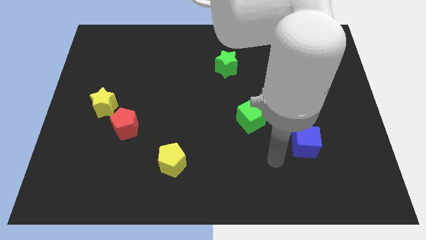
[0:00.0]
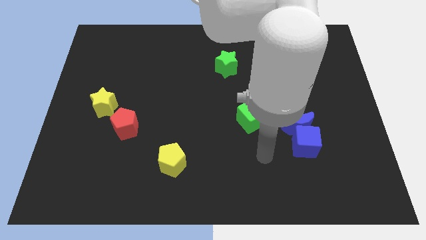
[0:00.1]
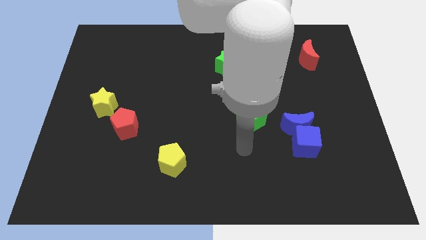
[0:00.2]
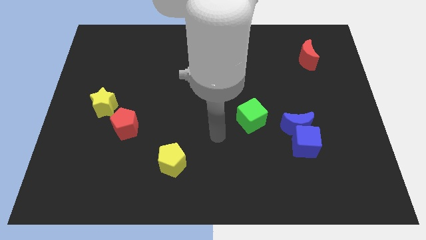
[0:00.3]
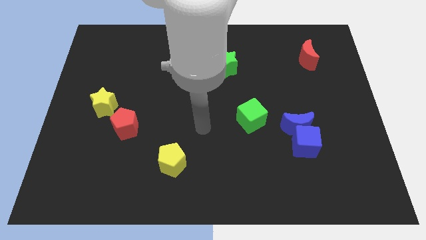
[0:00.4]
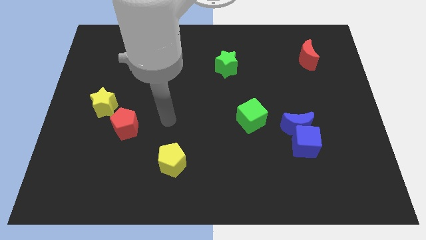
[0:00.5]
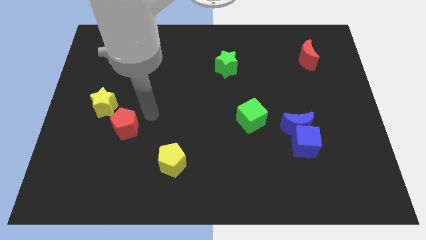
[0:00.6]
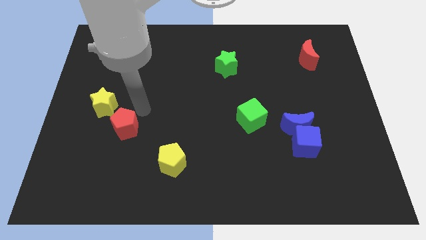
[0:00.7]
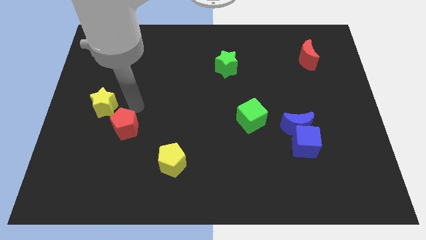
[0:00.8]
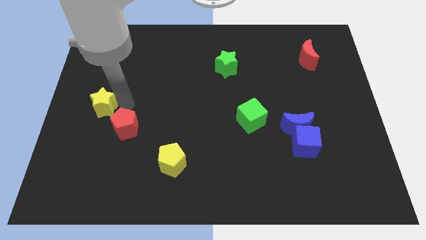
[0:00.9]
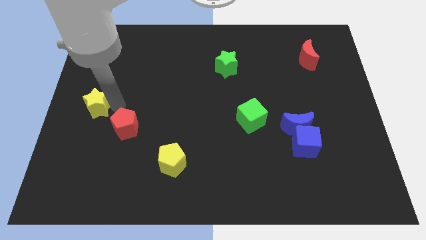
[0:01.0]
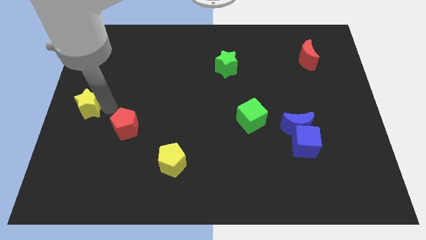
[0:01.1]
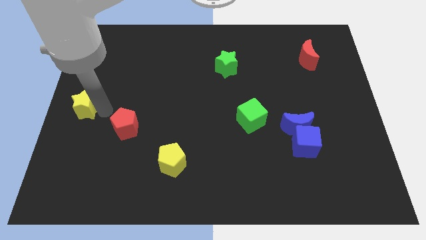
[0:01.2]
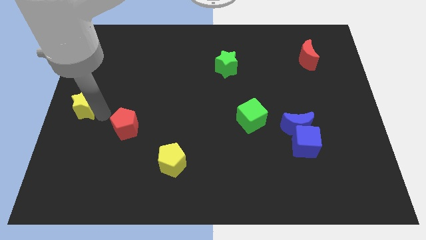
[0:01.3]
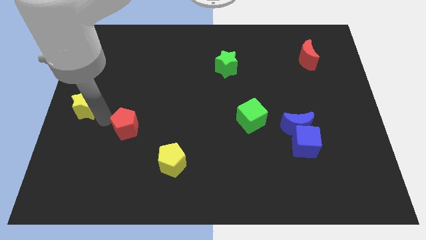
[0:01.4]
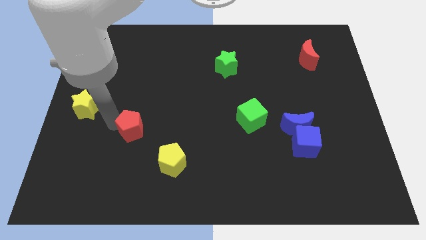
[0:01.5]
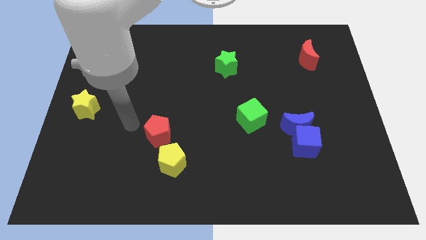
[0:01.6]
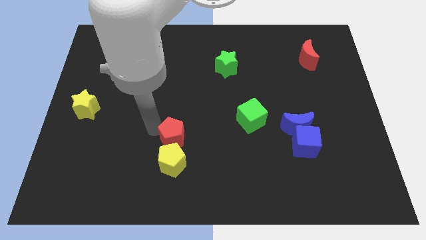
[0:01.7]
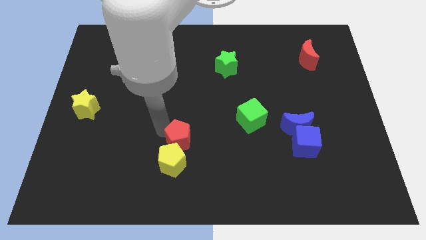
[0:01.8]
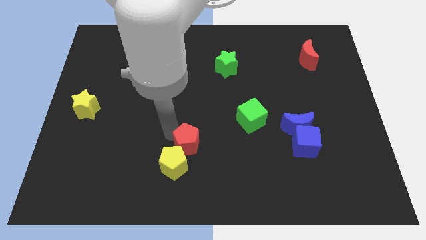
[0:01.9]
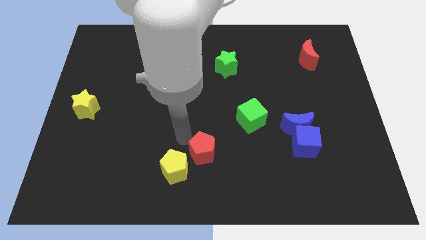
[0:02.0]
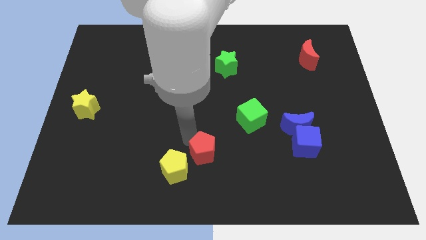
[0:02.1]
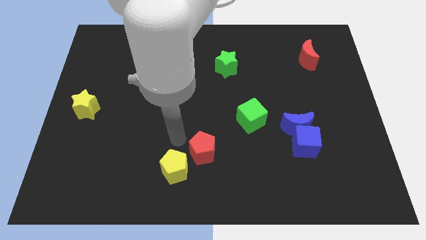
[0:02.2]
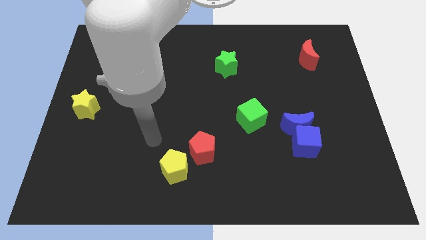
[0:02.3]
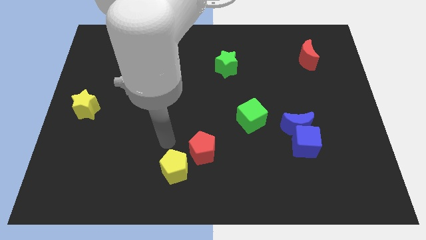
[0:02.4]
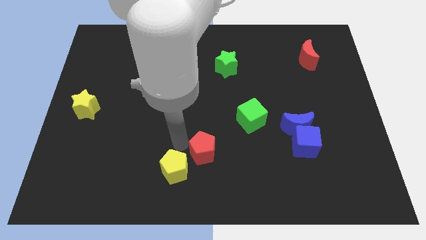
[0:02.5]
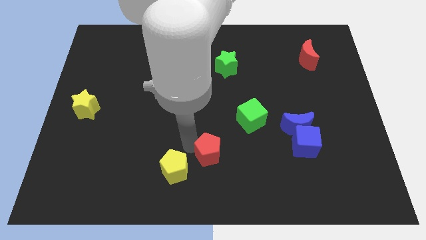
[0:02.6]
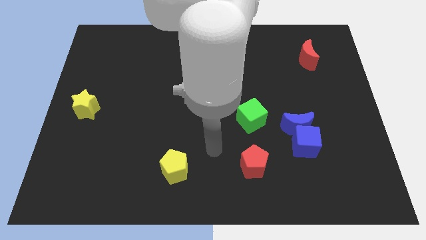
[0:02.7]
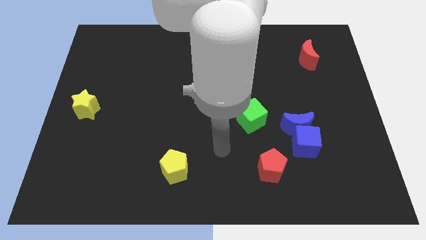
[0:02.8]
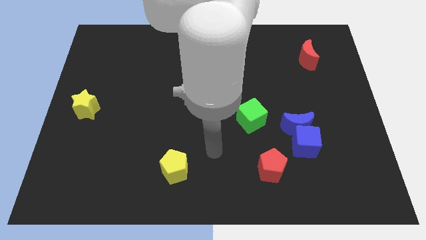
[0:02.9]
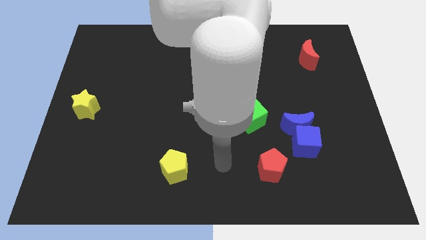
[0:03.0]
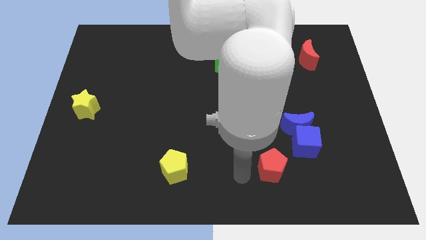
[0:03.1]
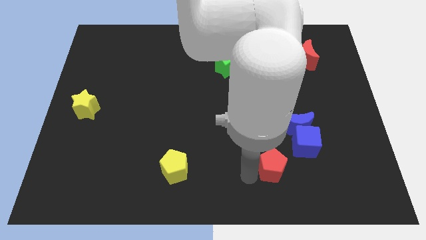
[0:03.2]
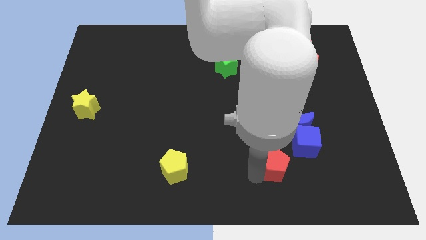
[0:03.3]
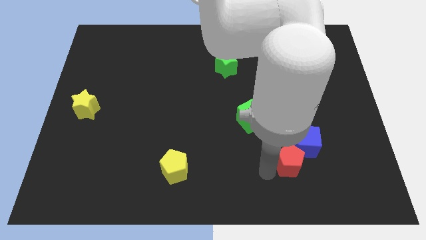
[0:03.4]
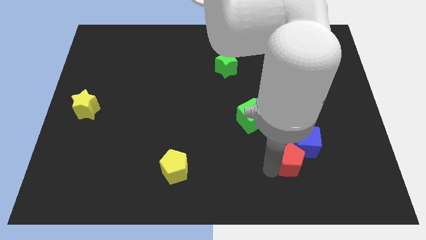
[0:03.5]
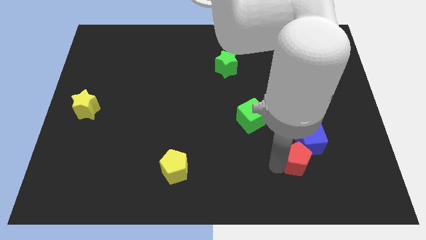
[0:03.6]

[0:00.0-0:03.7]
slide the red pentagon close to the blue cube

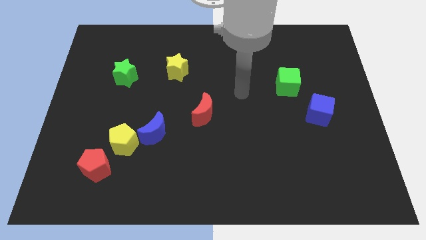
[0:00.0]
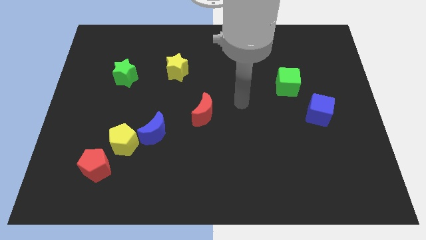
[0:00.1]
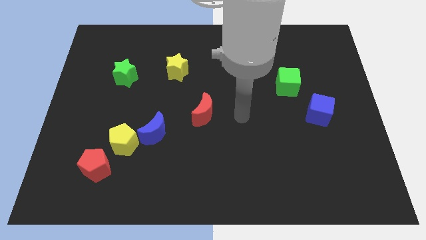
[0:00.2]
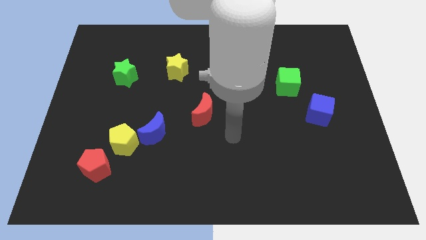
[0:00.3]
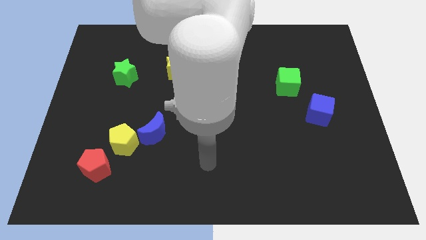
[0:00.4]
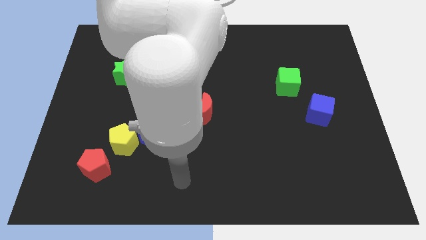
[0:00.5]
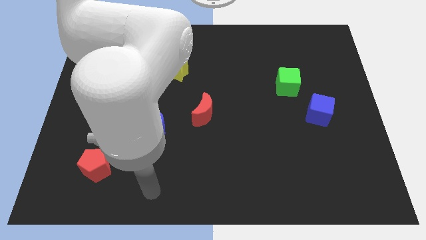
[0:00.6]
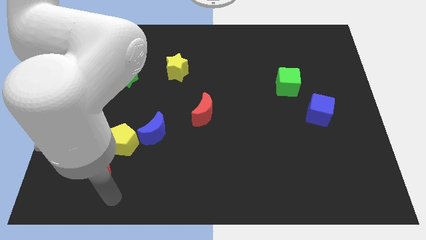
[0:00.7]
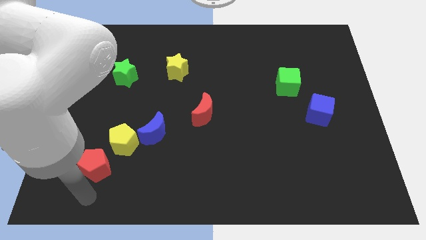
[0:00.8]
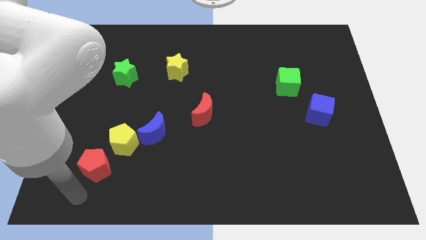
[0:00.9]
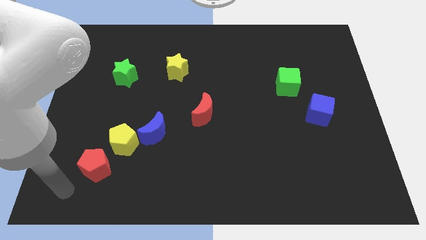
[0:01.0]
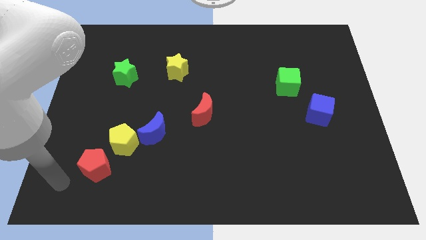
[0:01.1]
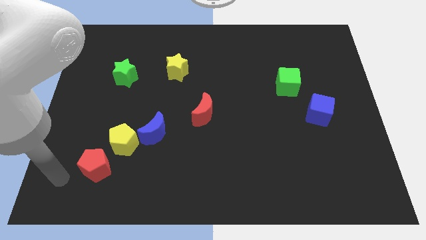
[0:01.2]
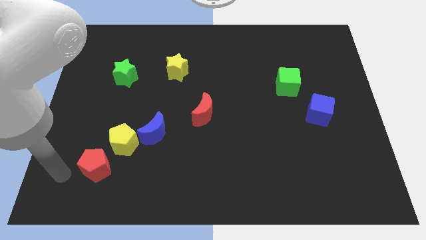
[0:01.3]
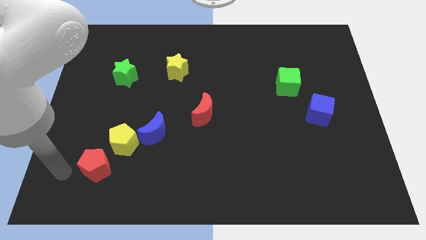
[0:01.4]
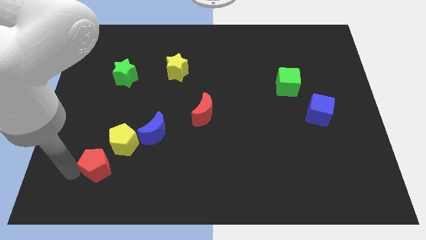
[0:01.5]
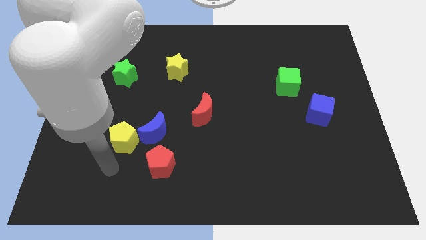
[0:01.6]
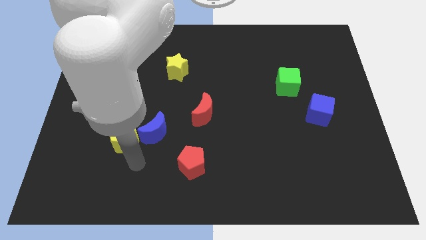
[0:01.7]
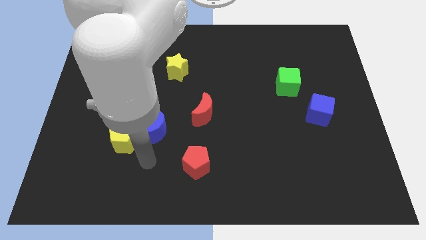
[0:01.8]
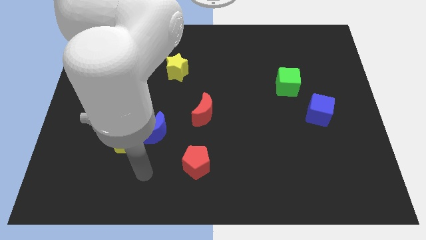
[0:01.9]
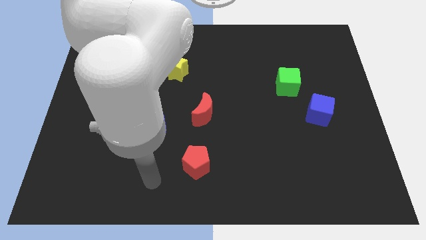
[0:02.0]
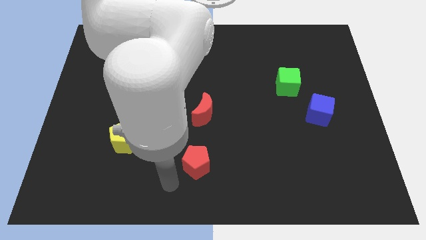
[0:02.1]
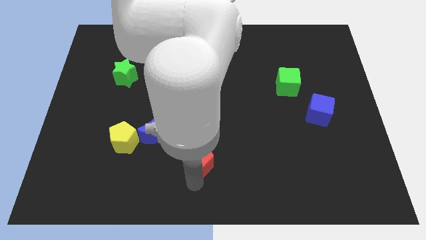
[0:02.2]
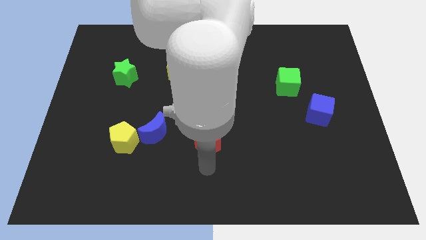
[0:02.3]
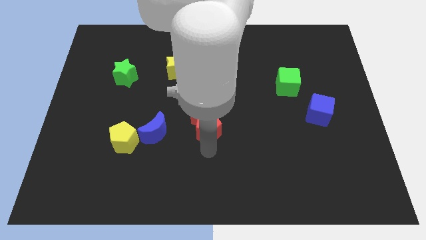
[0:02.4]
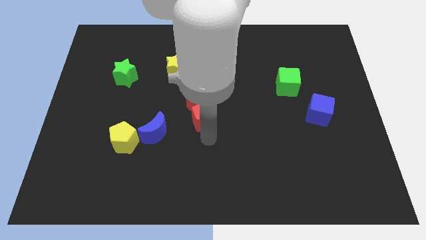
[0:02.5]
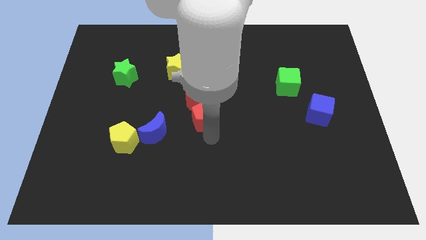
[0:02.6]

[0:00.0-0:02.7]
move the red pentagon next to the red moon

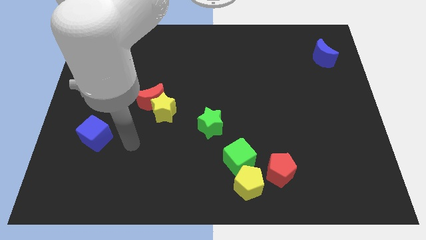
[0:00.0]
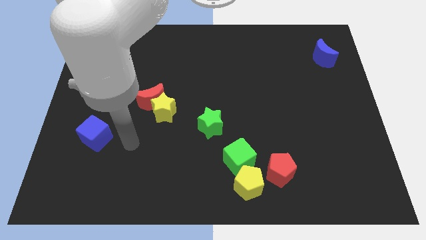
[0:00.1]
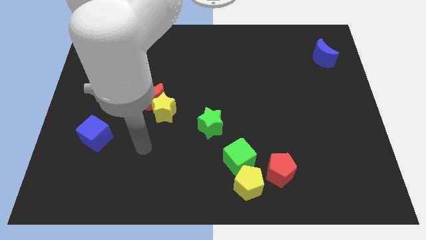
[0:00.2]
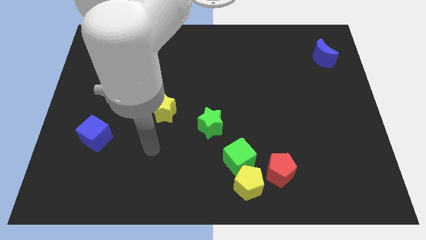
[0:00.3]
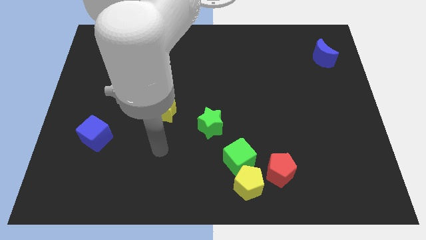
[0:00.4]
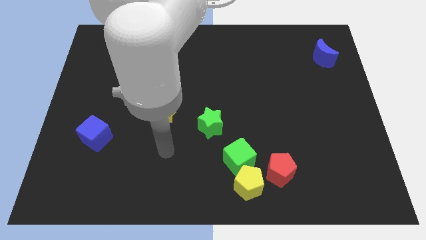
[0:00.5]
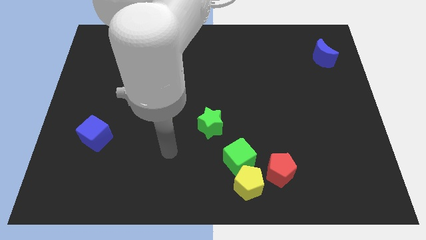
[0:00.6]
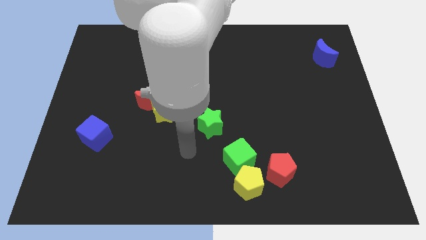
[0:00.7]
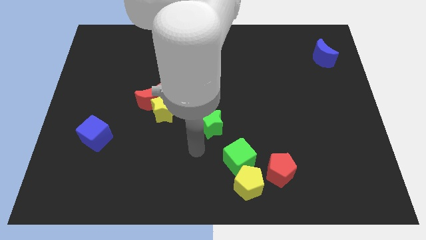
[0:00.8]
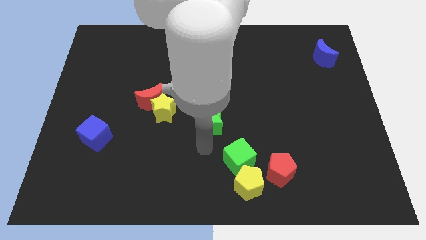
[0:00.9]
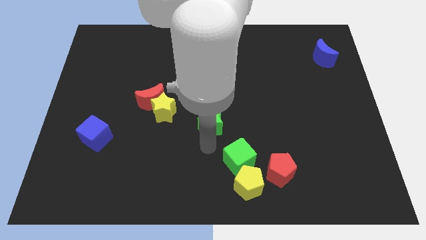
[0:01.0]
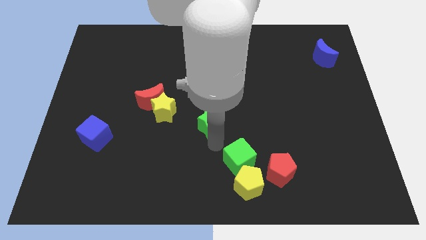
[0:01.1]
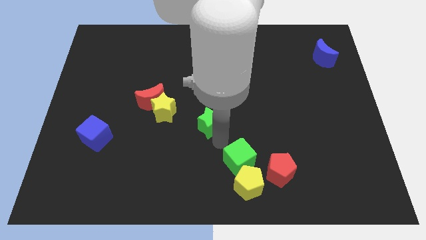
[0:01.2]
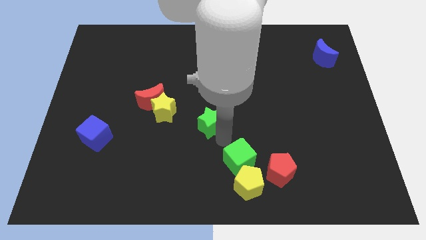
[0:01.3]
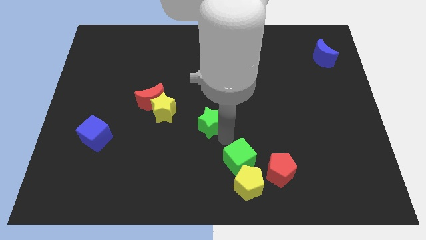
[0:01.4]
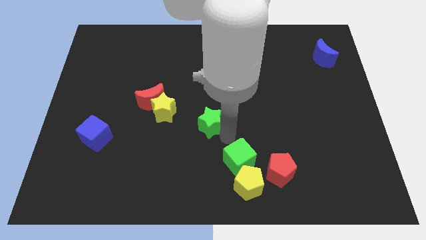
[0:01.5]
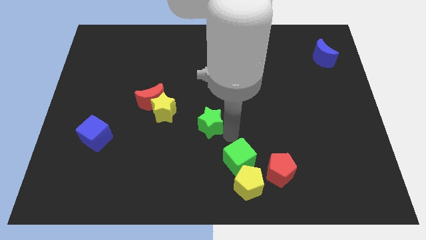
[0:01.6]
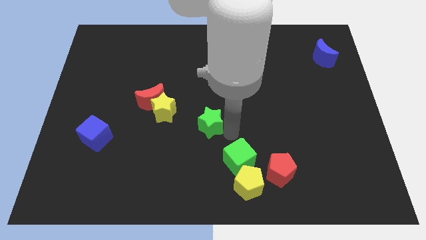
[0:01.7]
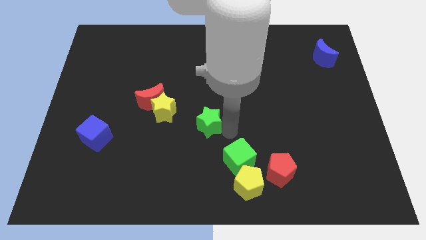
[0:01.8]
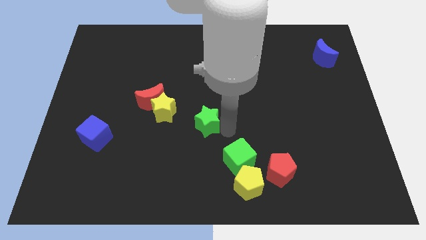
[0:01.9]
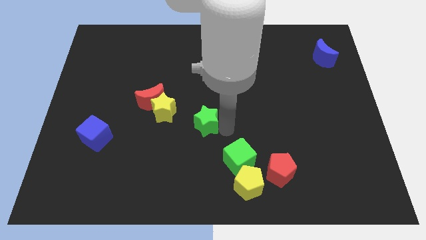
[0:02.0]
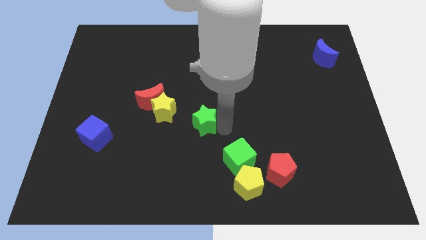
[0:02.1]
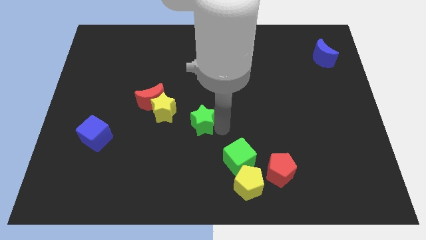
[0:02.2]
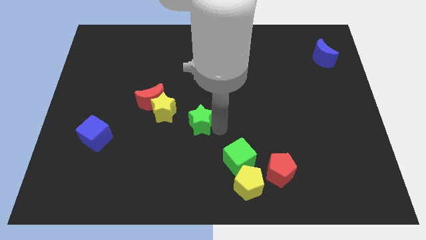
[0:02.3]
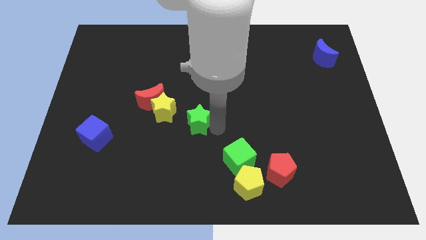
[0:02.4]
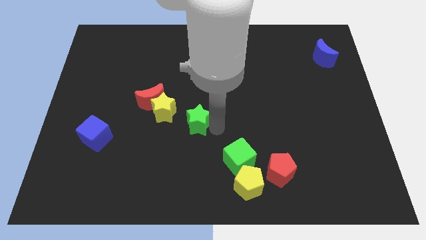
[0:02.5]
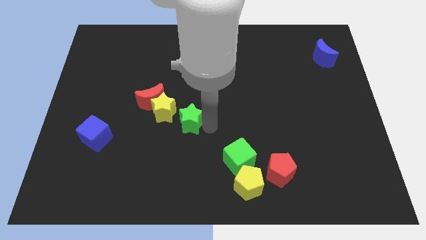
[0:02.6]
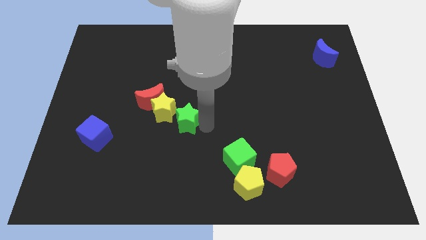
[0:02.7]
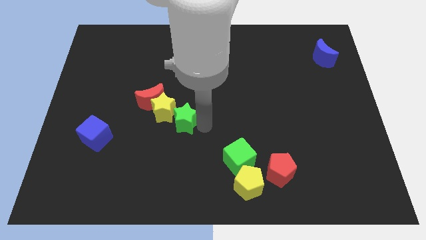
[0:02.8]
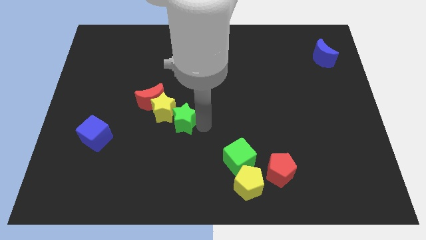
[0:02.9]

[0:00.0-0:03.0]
slide the green star towards the yellow star
